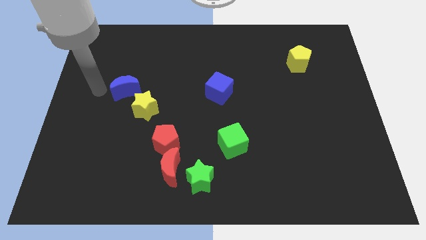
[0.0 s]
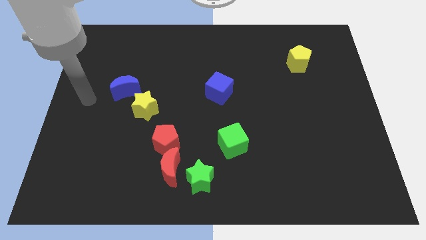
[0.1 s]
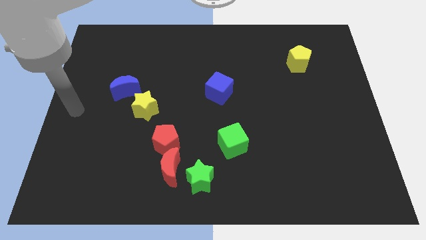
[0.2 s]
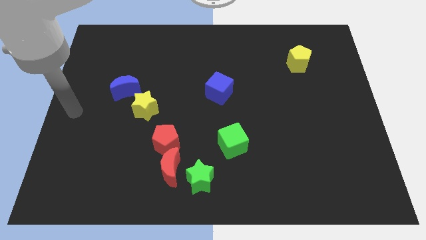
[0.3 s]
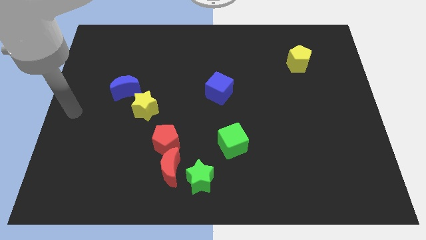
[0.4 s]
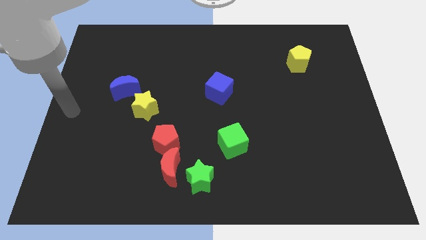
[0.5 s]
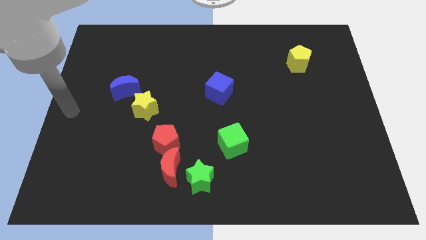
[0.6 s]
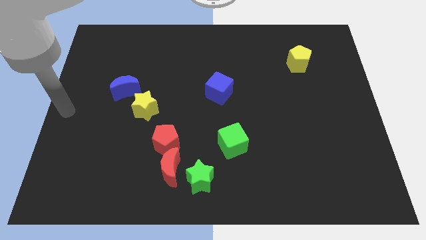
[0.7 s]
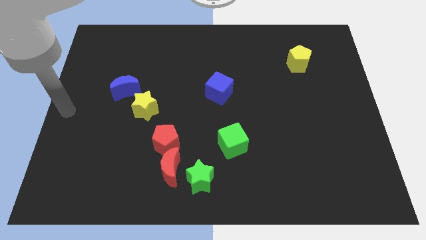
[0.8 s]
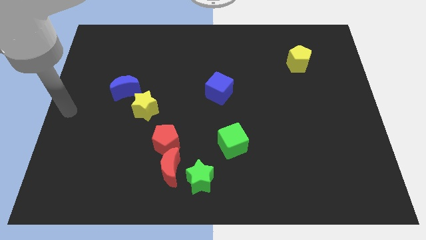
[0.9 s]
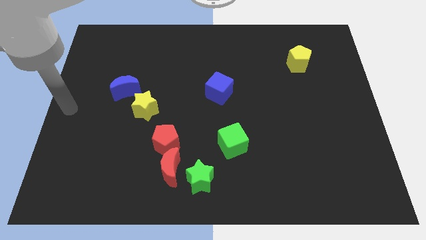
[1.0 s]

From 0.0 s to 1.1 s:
slide your arm to center left

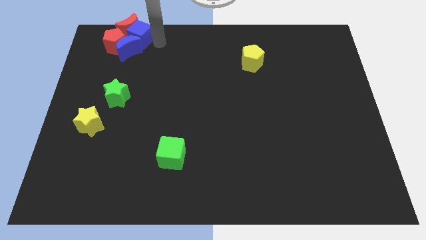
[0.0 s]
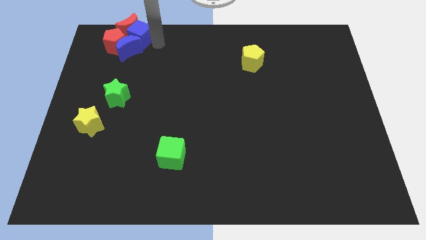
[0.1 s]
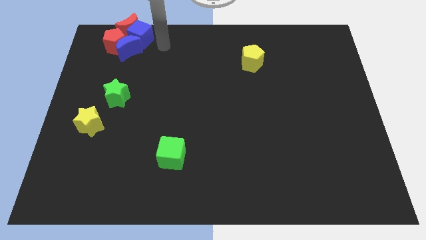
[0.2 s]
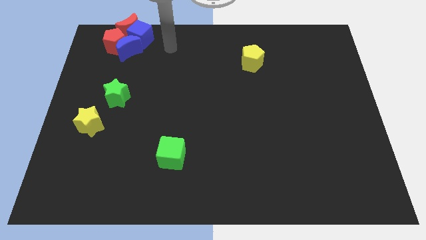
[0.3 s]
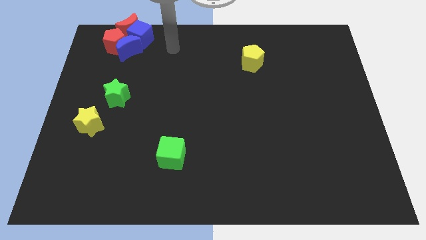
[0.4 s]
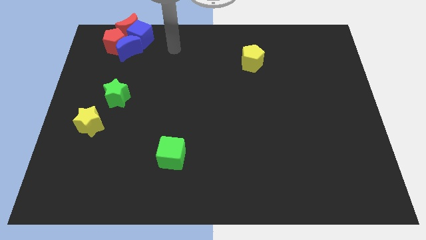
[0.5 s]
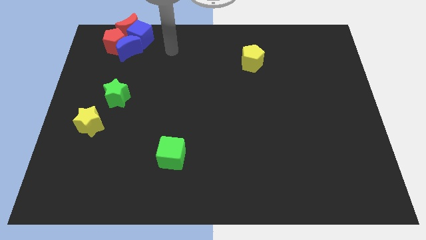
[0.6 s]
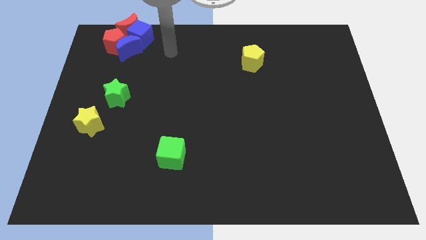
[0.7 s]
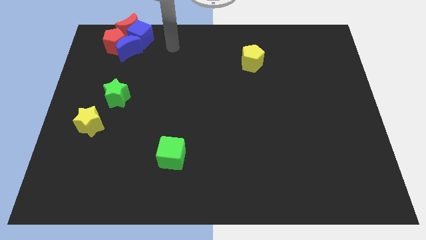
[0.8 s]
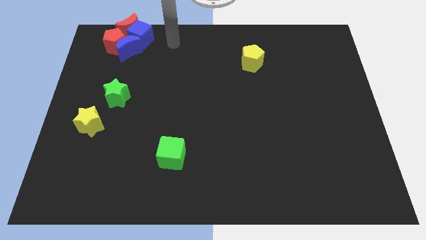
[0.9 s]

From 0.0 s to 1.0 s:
go away from the blue cube

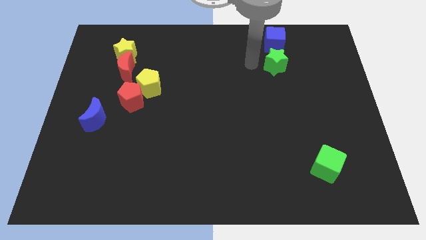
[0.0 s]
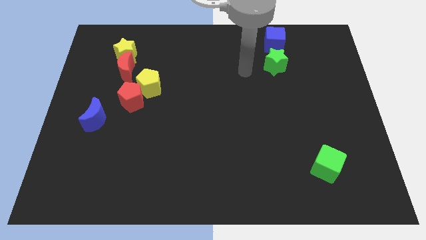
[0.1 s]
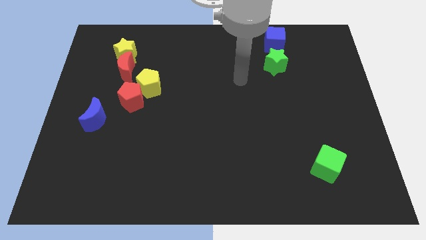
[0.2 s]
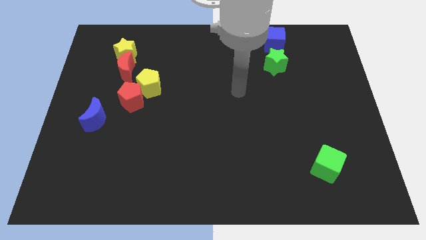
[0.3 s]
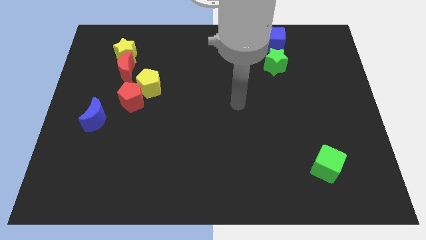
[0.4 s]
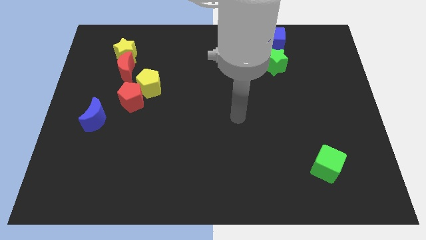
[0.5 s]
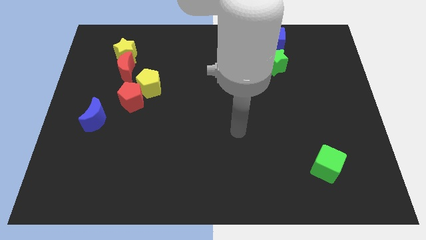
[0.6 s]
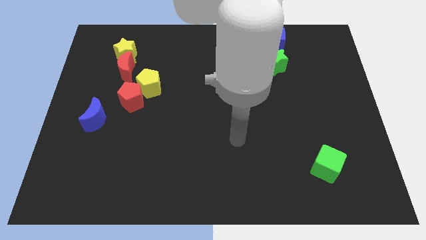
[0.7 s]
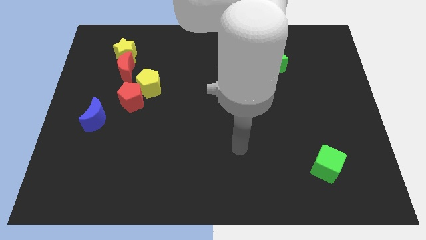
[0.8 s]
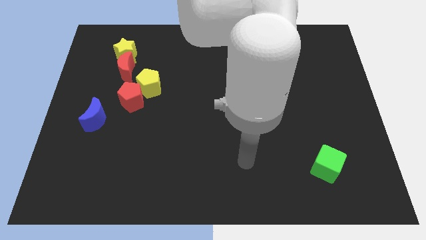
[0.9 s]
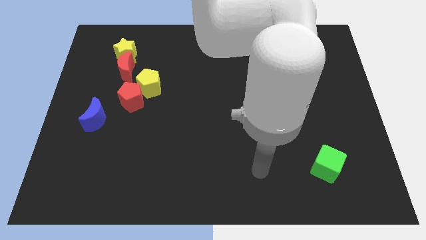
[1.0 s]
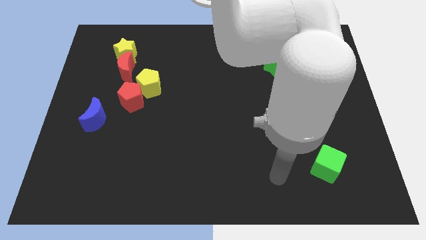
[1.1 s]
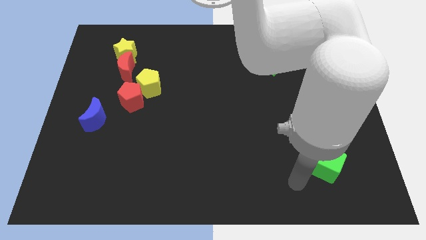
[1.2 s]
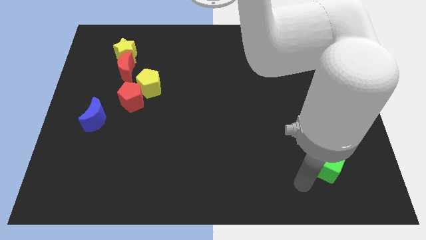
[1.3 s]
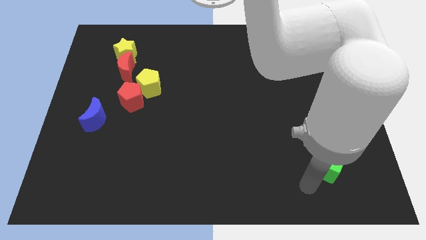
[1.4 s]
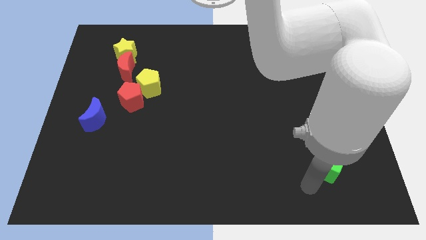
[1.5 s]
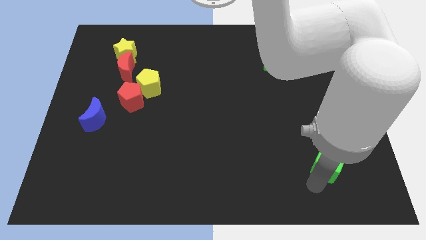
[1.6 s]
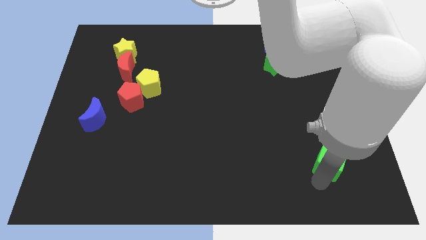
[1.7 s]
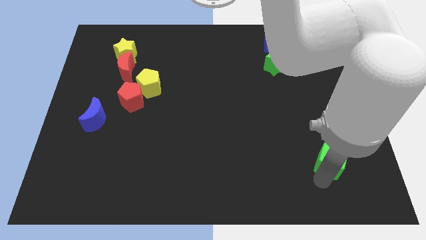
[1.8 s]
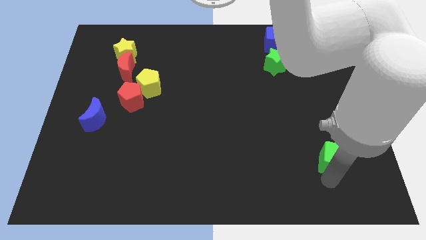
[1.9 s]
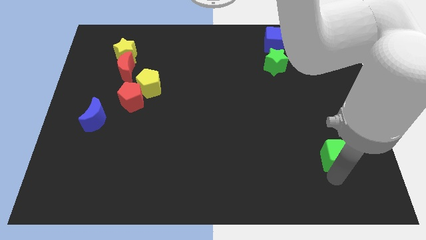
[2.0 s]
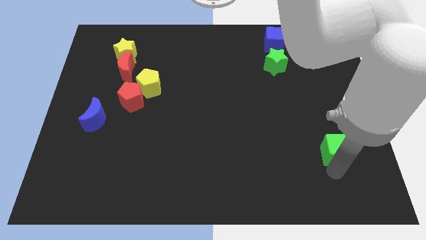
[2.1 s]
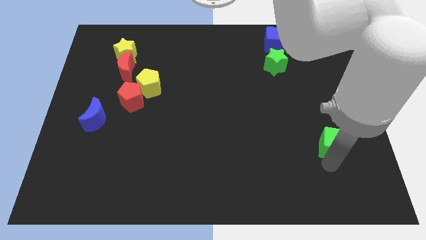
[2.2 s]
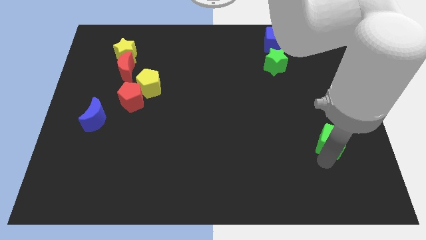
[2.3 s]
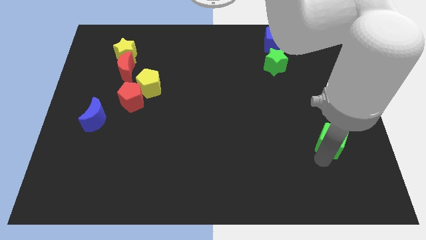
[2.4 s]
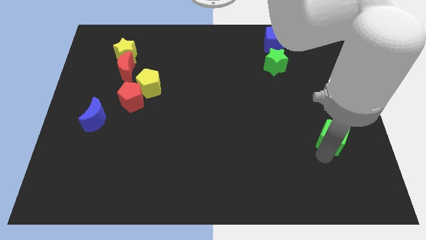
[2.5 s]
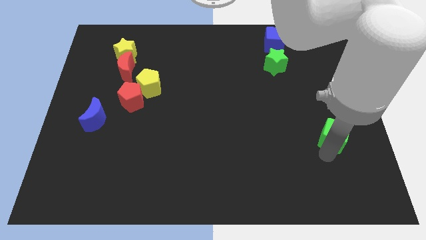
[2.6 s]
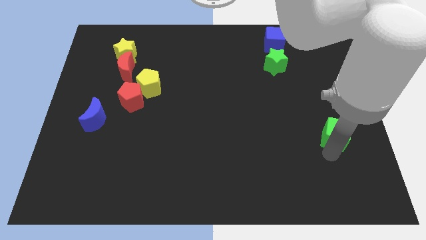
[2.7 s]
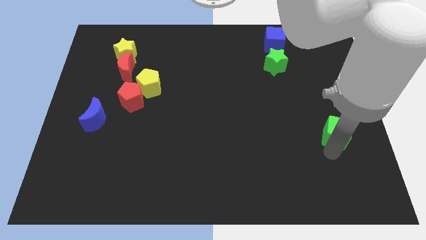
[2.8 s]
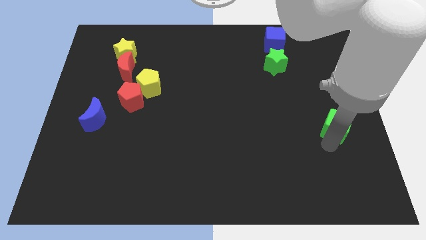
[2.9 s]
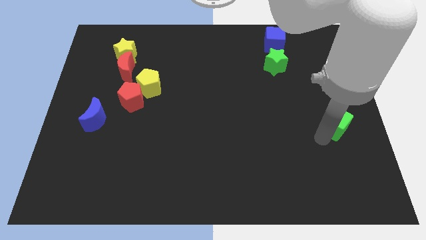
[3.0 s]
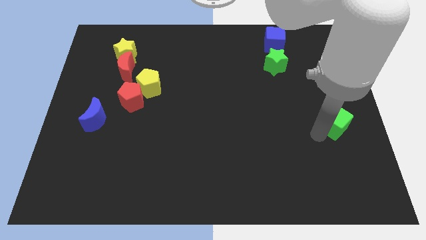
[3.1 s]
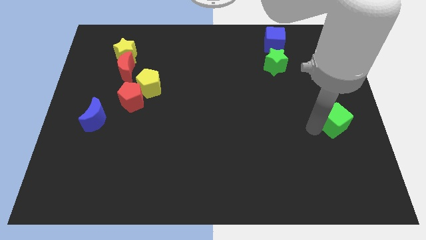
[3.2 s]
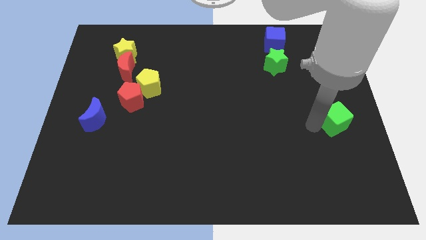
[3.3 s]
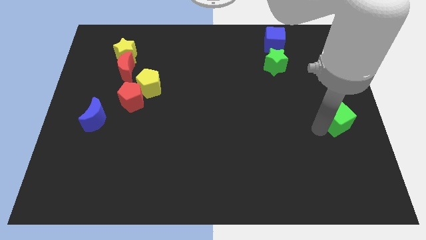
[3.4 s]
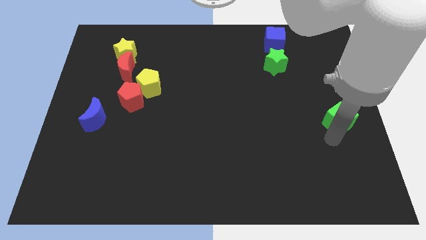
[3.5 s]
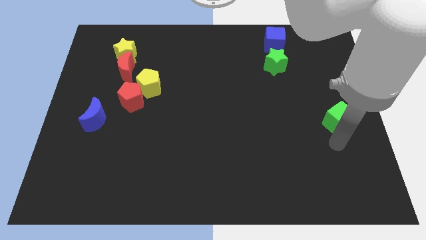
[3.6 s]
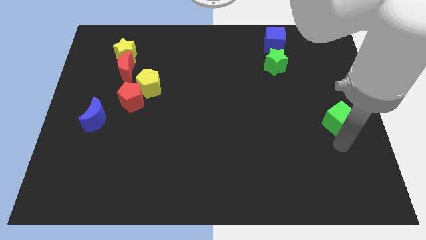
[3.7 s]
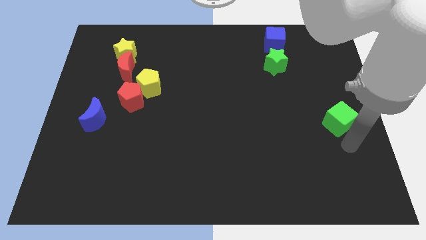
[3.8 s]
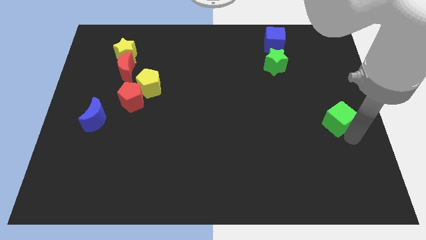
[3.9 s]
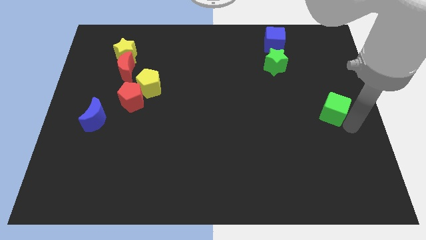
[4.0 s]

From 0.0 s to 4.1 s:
move green cube towards center right

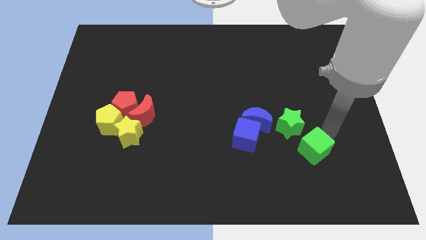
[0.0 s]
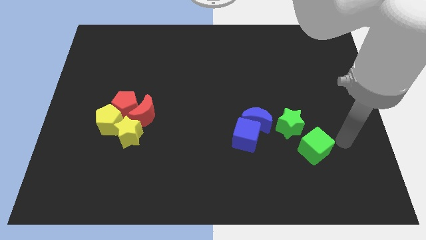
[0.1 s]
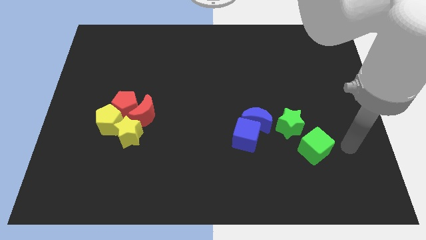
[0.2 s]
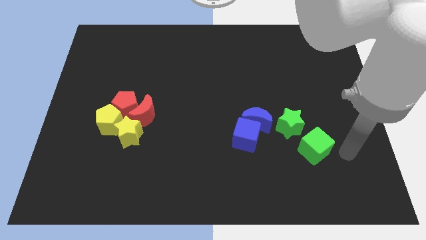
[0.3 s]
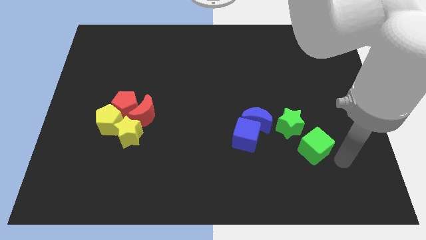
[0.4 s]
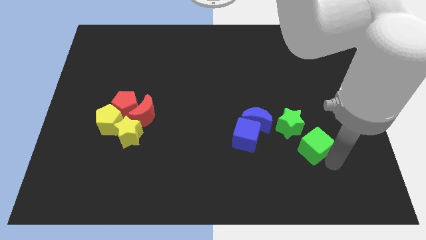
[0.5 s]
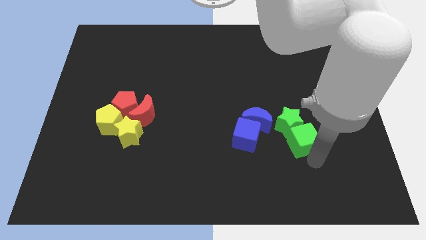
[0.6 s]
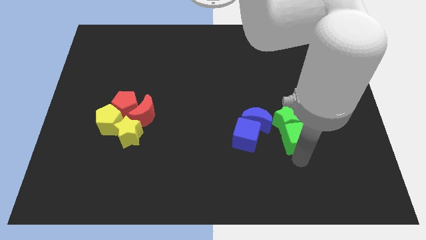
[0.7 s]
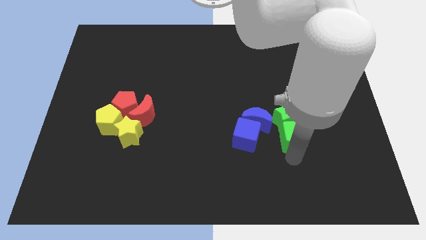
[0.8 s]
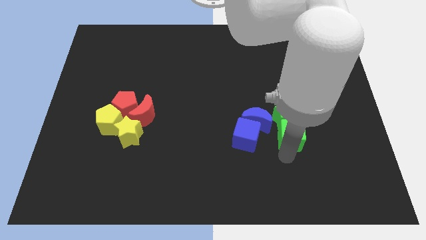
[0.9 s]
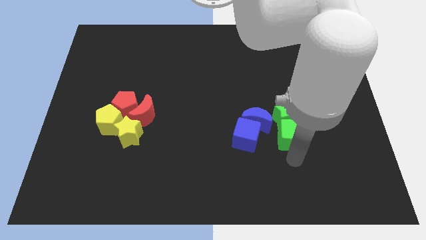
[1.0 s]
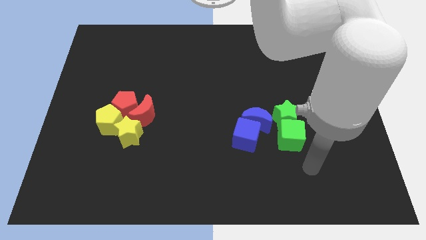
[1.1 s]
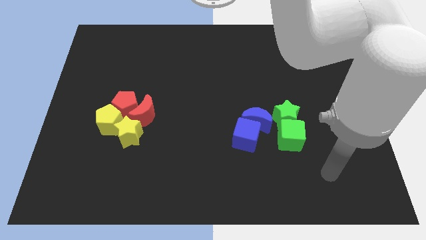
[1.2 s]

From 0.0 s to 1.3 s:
move the green star to right side of the blue crescent

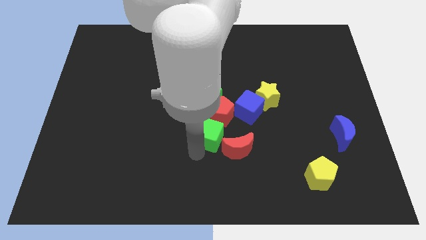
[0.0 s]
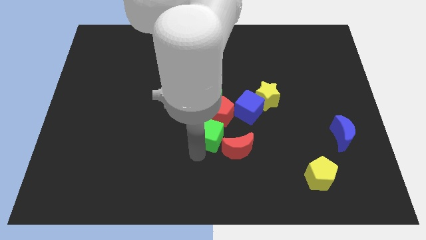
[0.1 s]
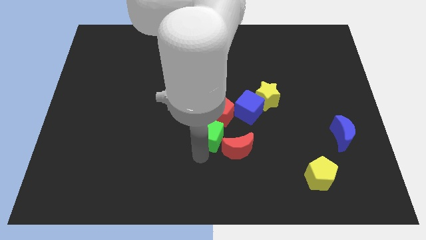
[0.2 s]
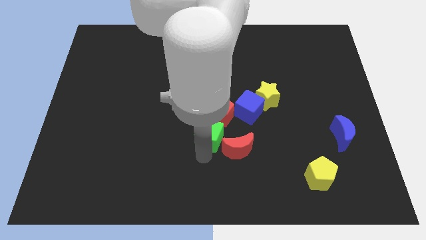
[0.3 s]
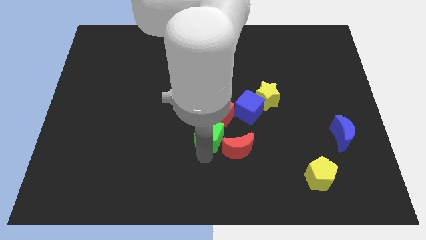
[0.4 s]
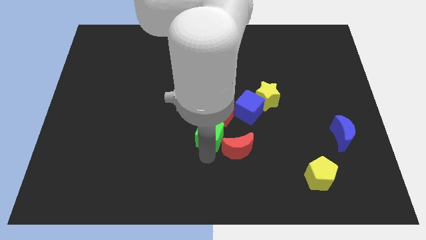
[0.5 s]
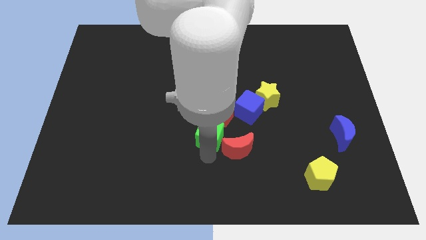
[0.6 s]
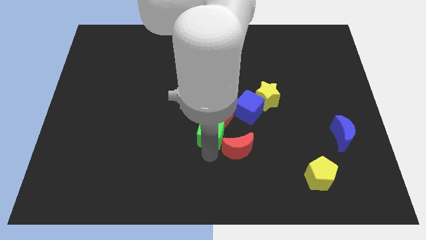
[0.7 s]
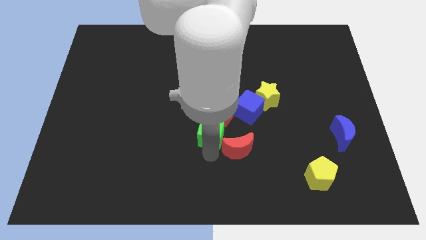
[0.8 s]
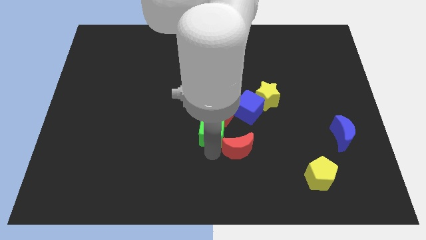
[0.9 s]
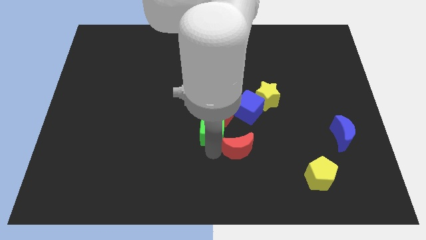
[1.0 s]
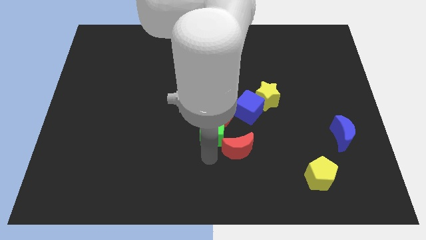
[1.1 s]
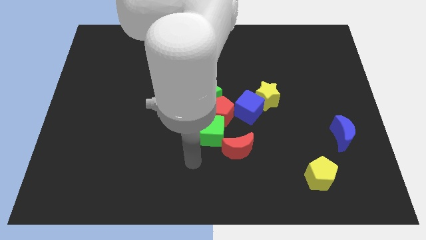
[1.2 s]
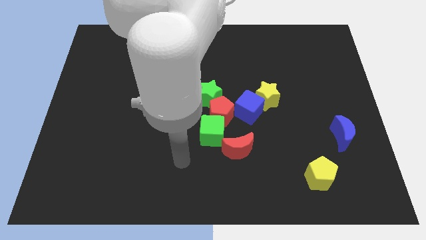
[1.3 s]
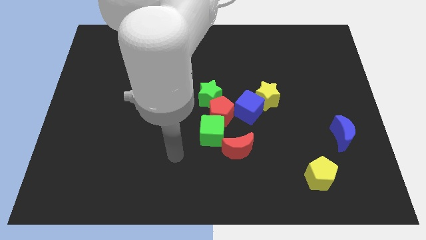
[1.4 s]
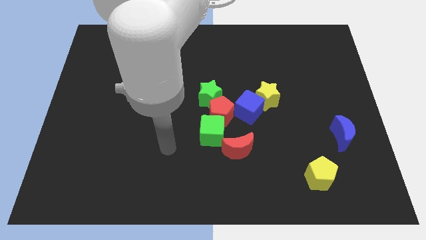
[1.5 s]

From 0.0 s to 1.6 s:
move the green cube into the red pentagon
